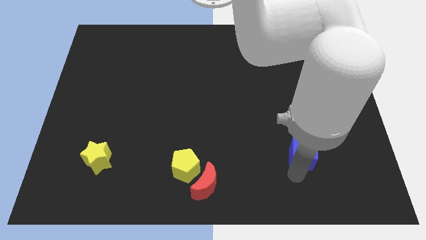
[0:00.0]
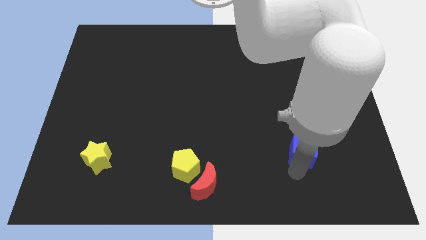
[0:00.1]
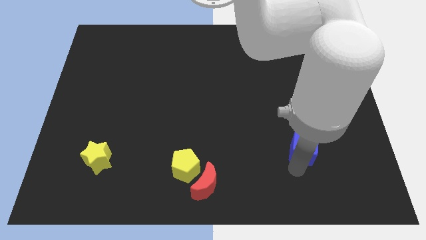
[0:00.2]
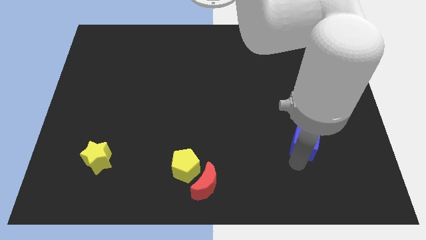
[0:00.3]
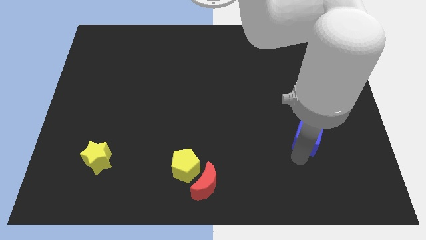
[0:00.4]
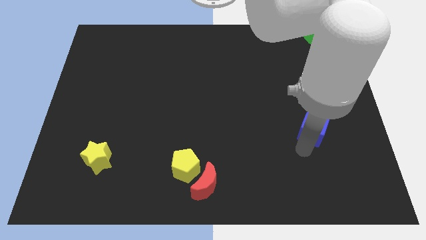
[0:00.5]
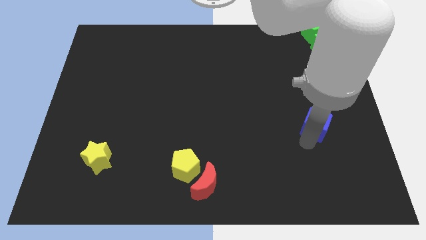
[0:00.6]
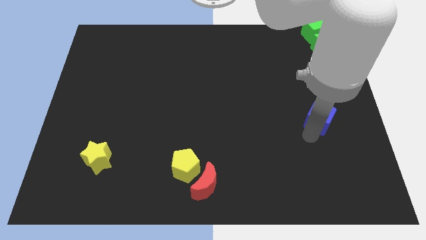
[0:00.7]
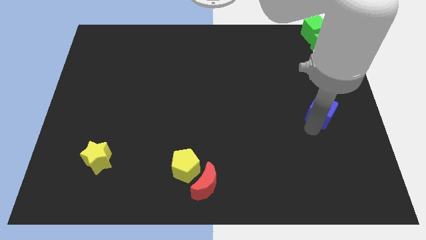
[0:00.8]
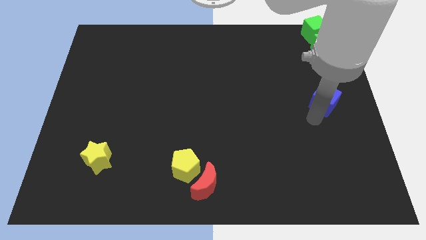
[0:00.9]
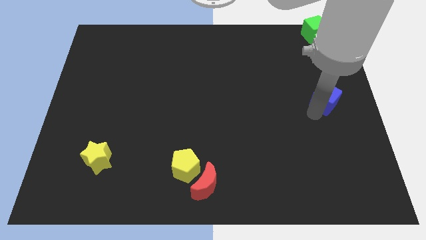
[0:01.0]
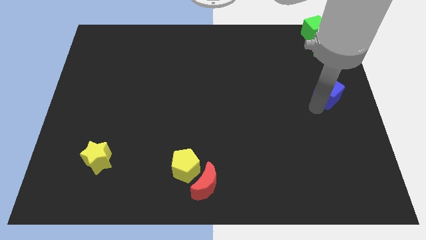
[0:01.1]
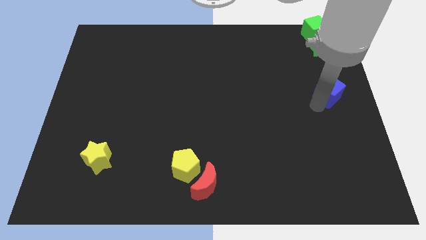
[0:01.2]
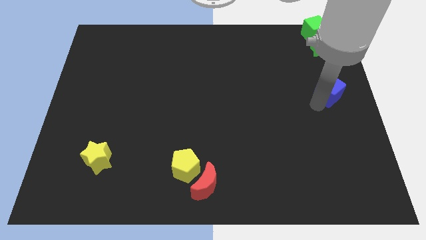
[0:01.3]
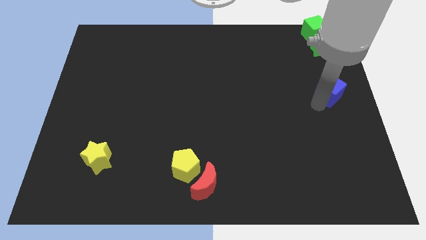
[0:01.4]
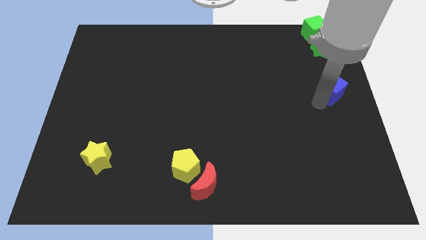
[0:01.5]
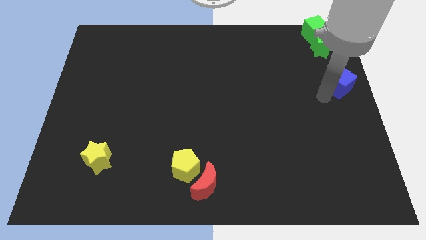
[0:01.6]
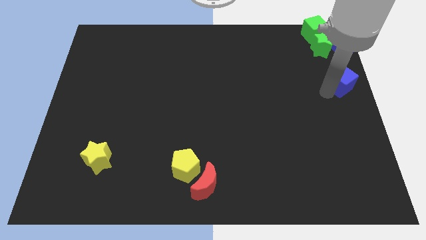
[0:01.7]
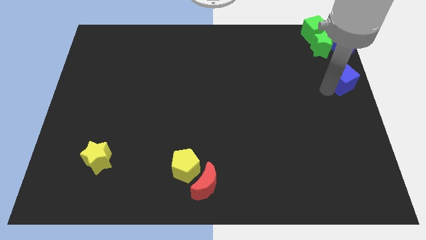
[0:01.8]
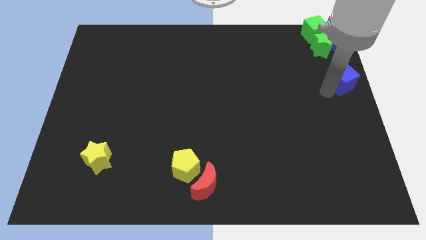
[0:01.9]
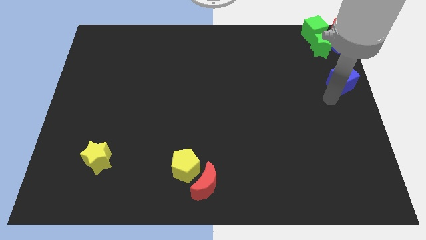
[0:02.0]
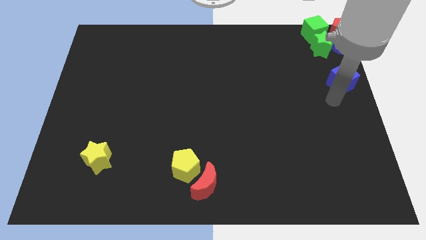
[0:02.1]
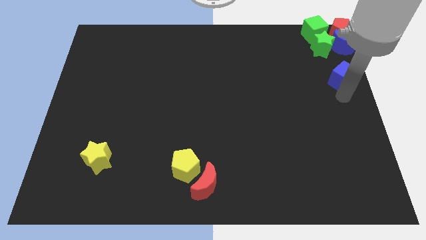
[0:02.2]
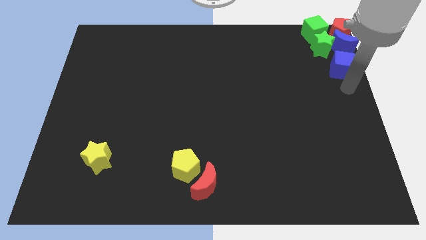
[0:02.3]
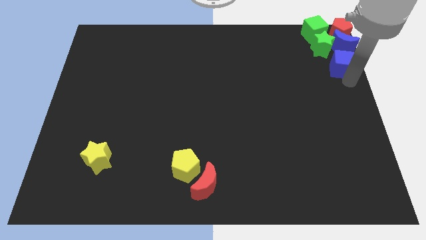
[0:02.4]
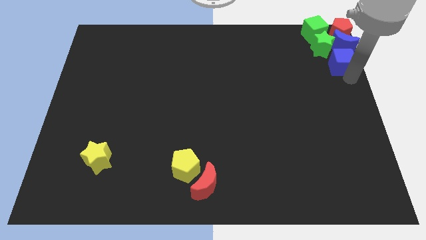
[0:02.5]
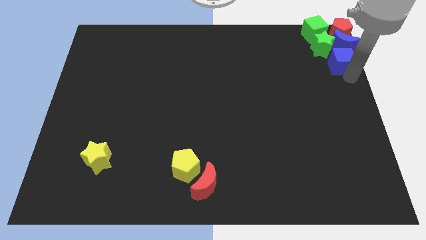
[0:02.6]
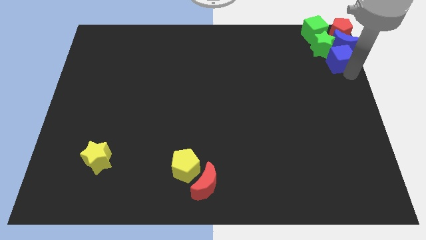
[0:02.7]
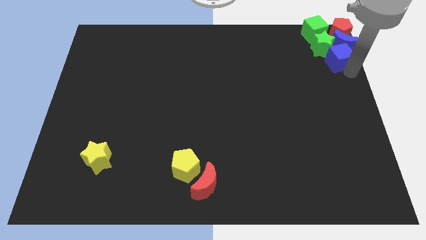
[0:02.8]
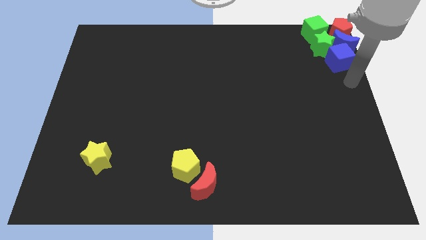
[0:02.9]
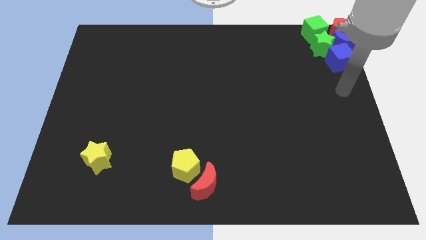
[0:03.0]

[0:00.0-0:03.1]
push the blue cube to the bottom side of the blue moon

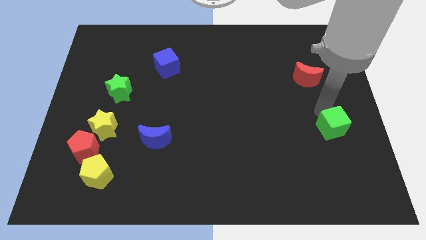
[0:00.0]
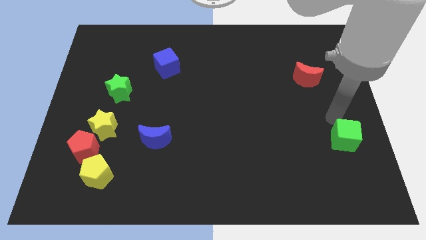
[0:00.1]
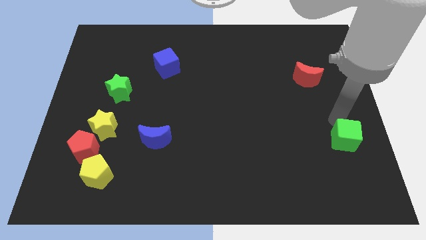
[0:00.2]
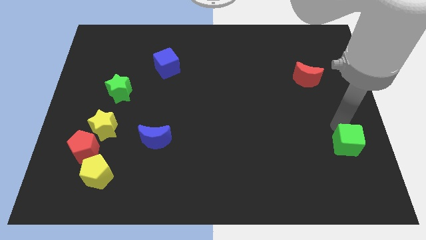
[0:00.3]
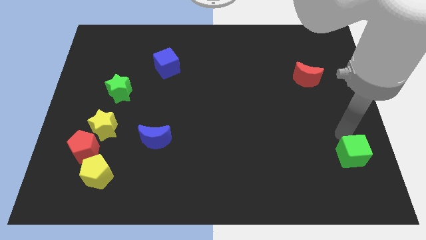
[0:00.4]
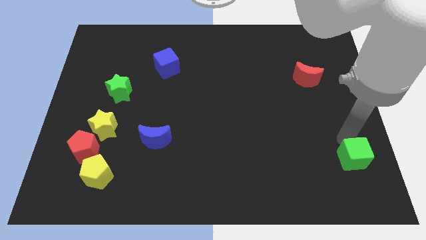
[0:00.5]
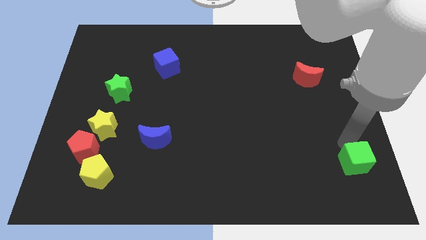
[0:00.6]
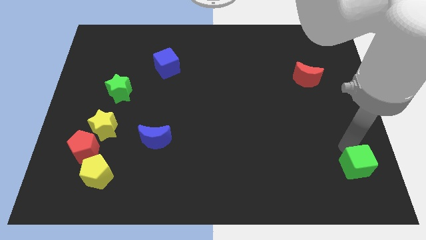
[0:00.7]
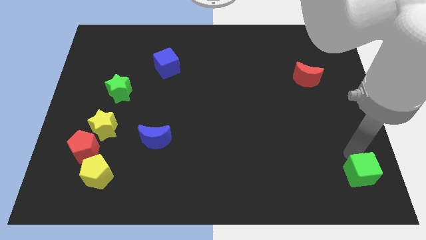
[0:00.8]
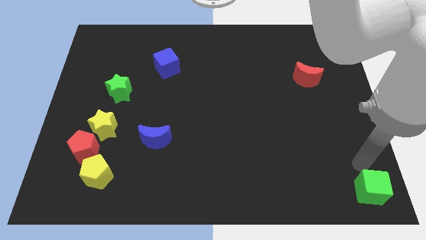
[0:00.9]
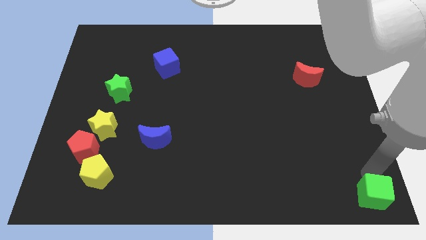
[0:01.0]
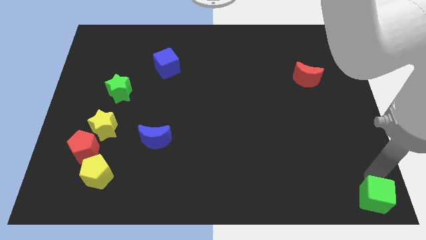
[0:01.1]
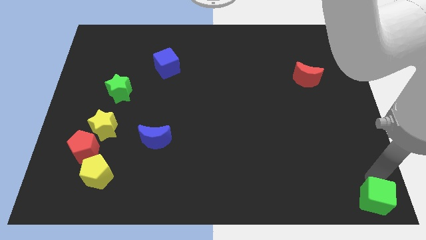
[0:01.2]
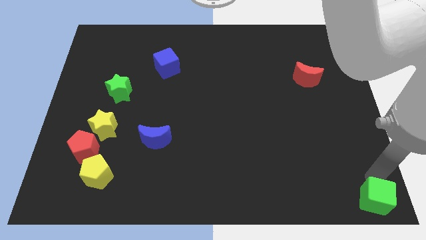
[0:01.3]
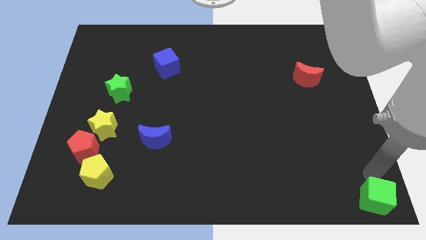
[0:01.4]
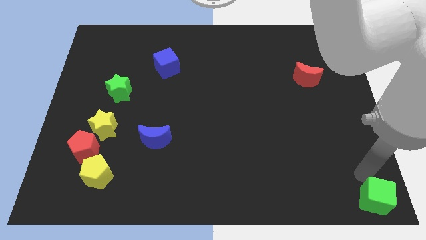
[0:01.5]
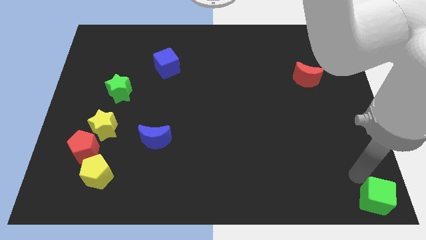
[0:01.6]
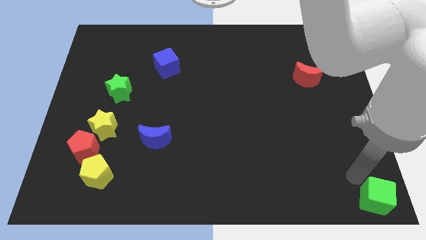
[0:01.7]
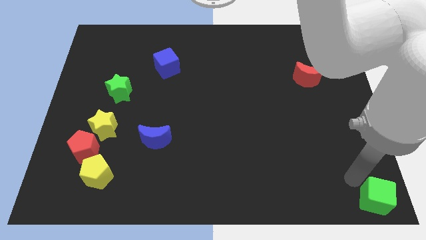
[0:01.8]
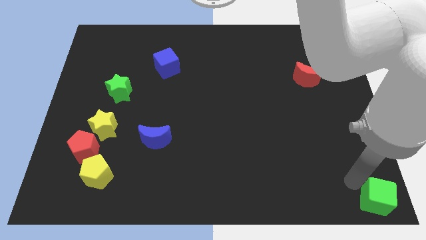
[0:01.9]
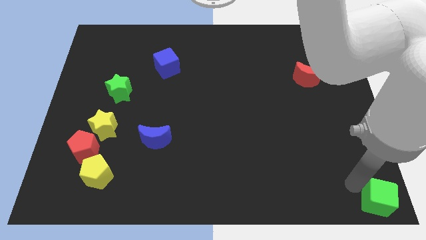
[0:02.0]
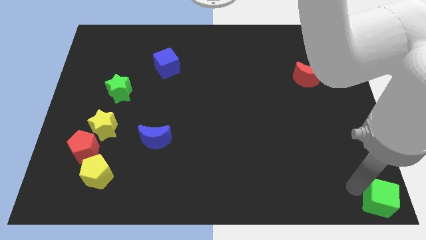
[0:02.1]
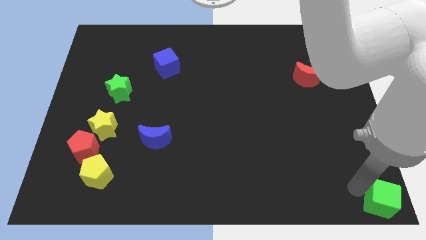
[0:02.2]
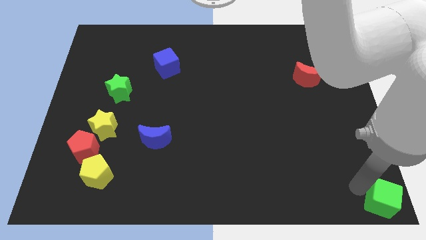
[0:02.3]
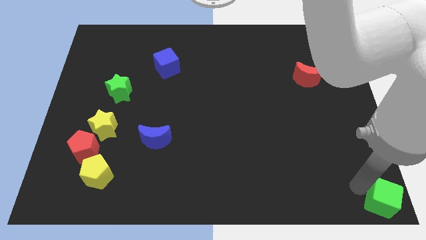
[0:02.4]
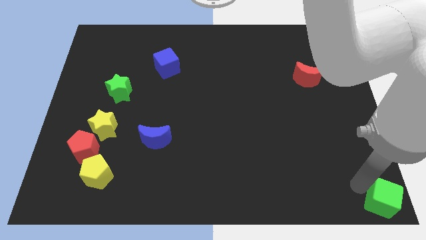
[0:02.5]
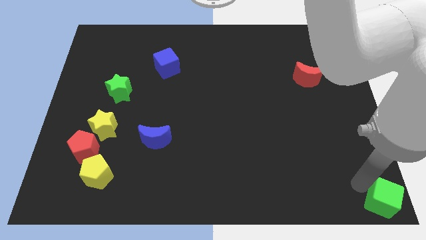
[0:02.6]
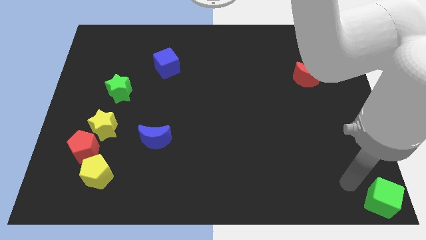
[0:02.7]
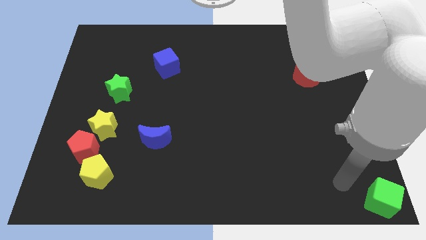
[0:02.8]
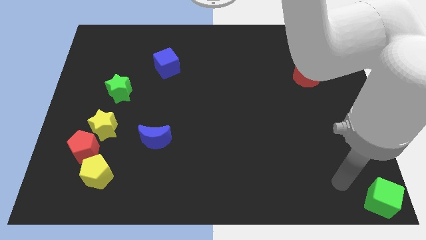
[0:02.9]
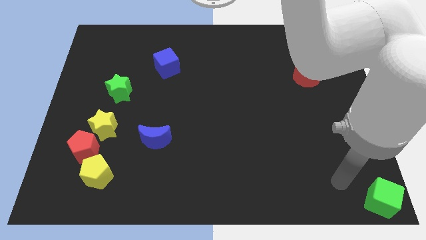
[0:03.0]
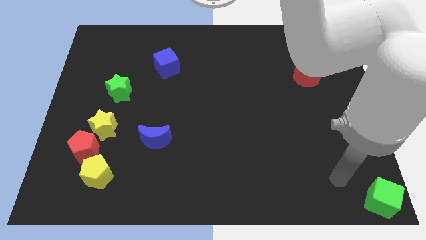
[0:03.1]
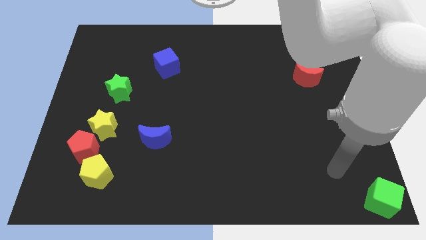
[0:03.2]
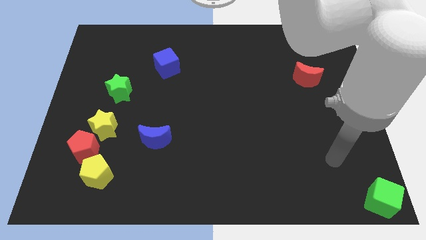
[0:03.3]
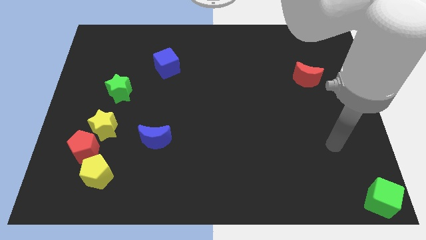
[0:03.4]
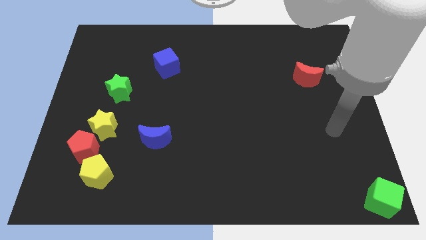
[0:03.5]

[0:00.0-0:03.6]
place the green block to the right bottom corner of the board

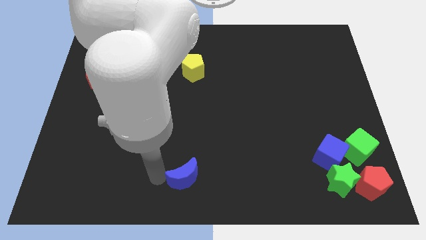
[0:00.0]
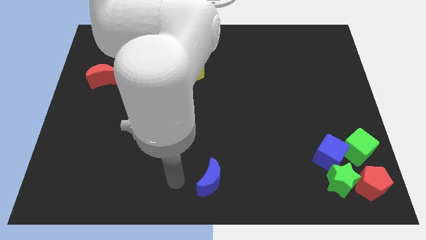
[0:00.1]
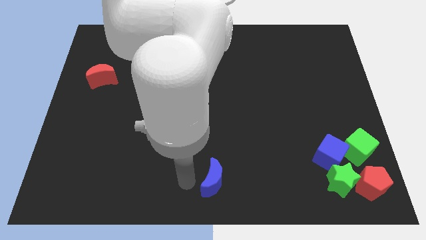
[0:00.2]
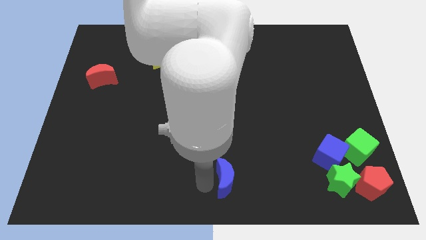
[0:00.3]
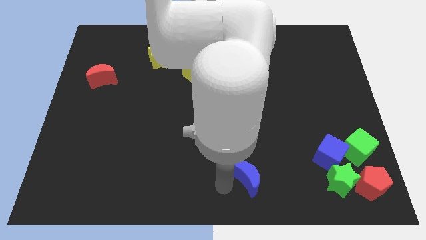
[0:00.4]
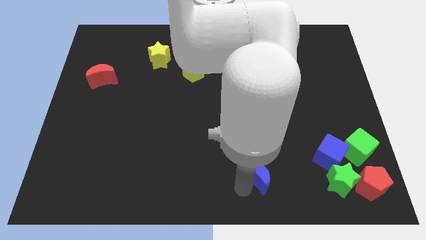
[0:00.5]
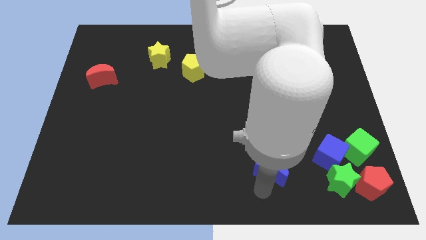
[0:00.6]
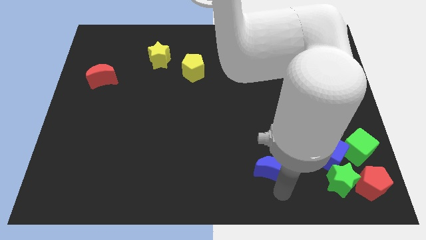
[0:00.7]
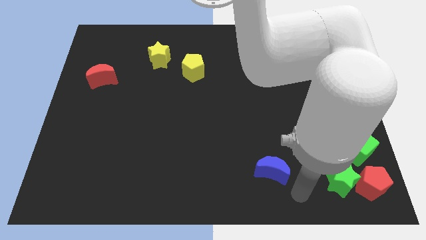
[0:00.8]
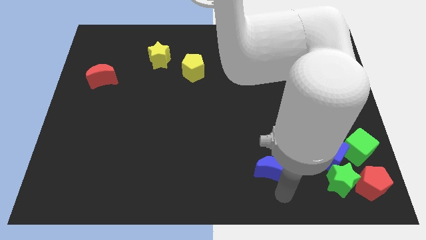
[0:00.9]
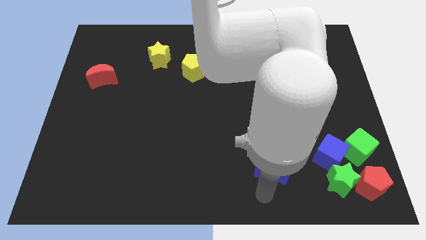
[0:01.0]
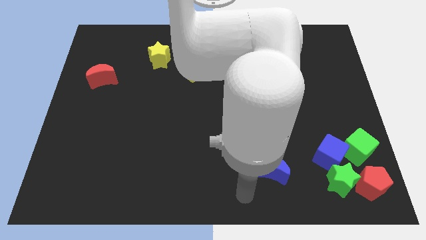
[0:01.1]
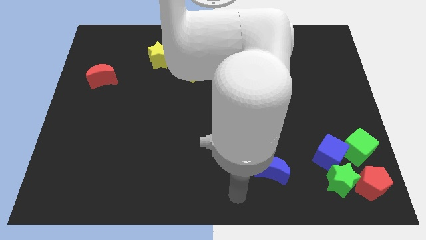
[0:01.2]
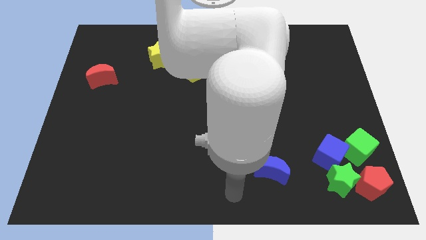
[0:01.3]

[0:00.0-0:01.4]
move the blue crescent towards the group of blocks

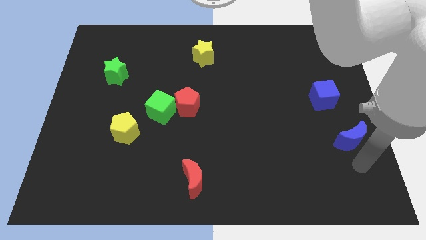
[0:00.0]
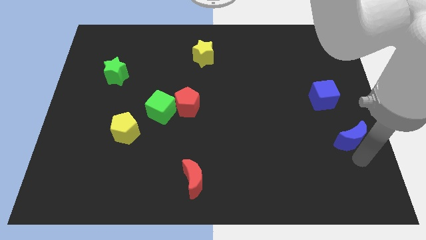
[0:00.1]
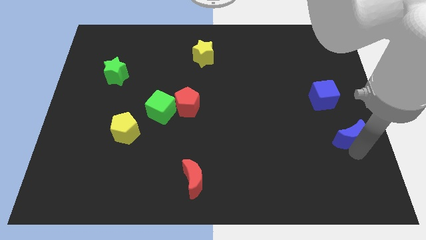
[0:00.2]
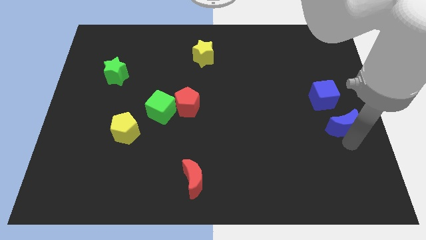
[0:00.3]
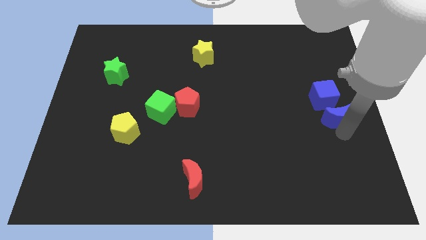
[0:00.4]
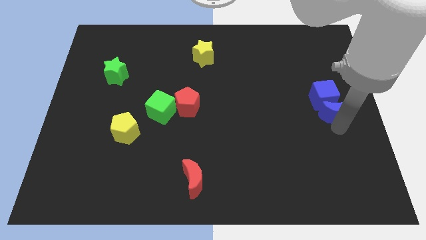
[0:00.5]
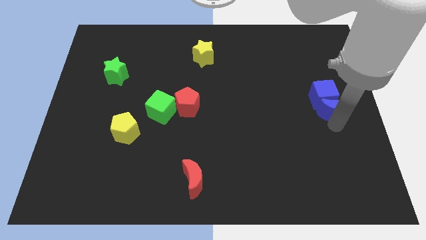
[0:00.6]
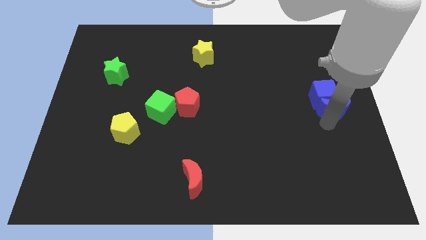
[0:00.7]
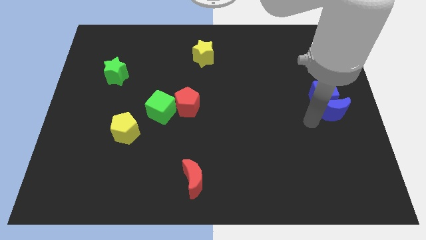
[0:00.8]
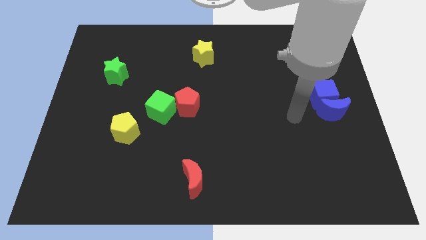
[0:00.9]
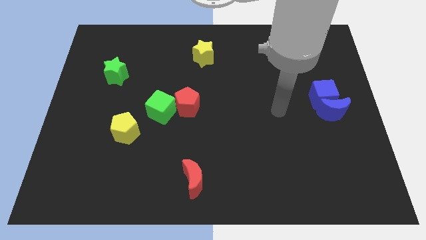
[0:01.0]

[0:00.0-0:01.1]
push the blue moon into the blue cube
